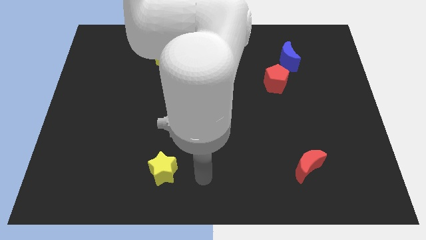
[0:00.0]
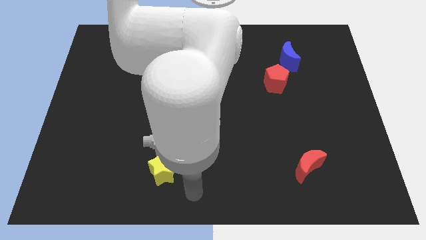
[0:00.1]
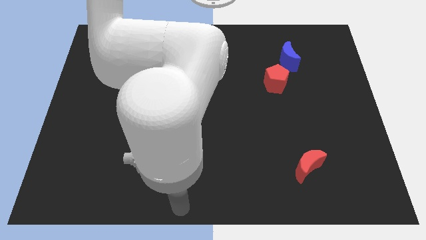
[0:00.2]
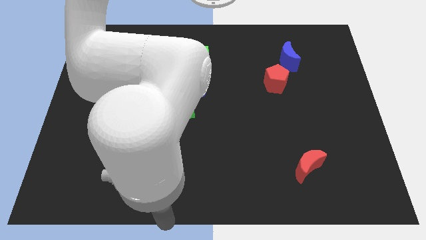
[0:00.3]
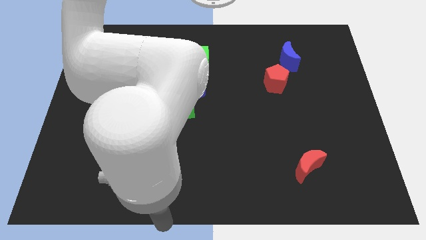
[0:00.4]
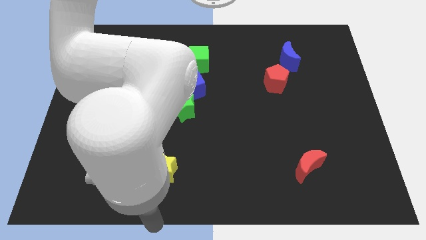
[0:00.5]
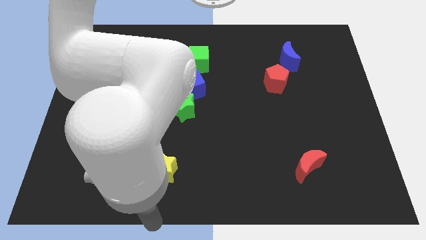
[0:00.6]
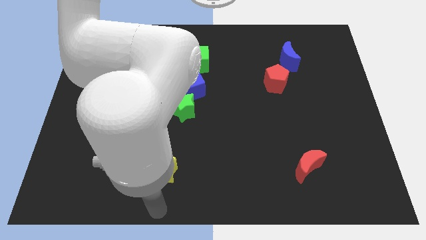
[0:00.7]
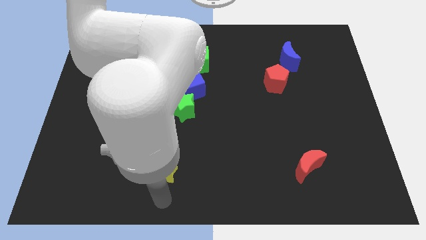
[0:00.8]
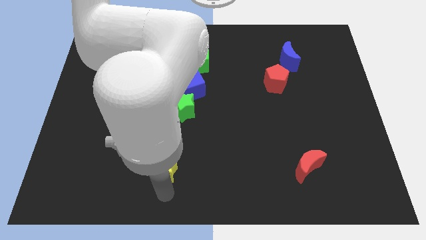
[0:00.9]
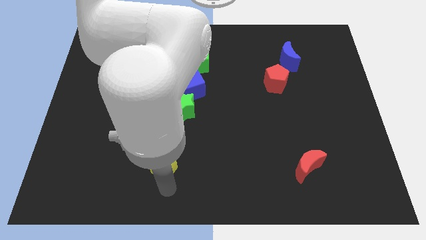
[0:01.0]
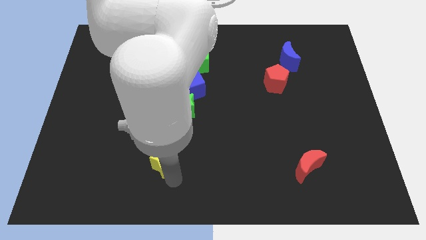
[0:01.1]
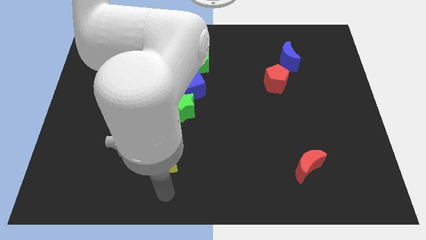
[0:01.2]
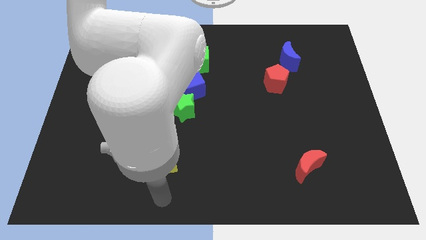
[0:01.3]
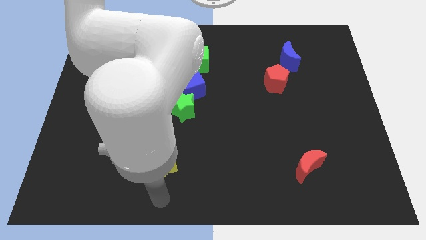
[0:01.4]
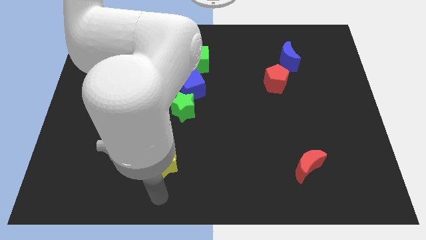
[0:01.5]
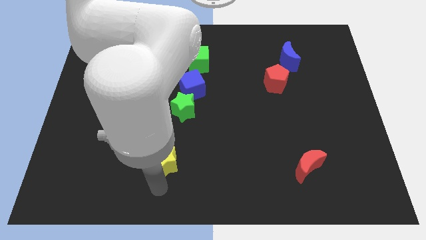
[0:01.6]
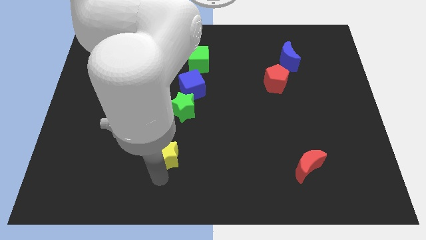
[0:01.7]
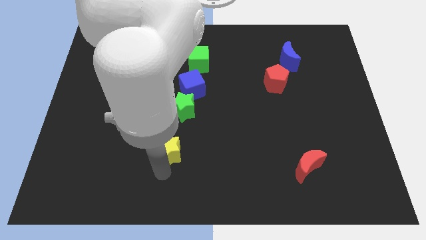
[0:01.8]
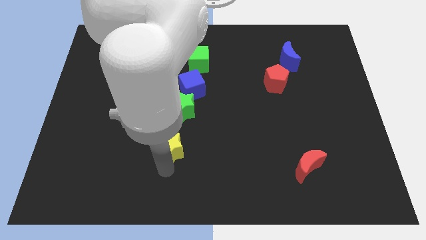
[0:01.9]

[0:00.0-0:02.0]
drag the yellow star towards the green star

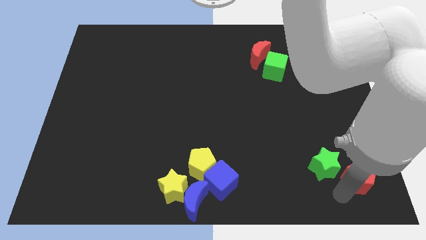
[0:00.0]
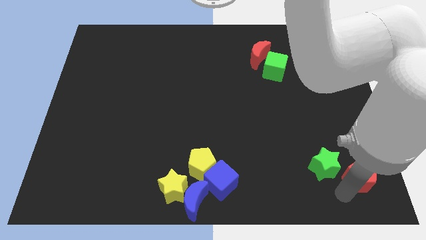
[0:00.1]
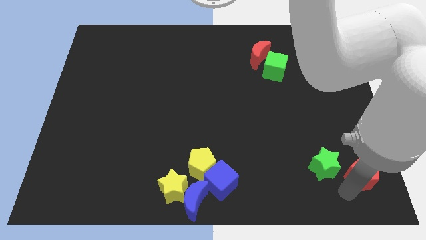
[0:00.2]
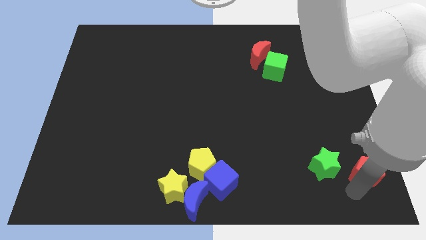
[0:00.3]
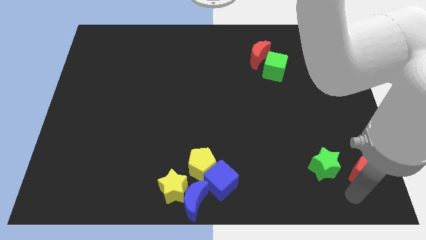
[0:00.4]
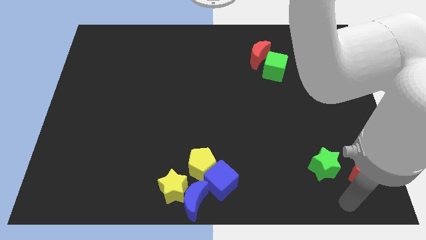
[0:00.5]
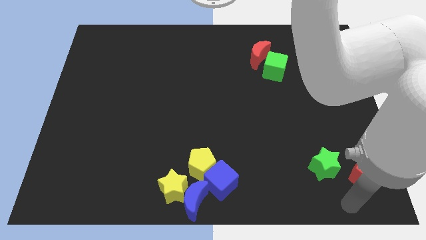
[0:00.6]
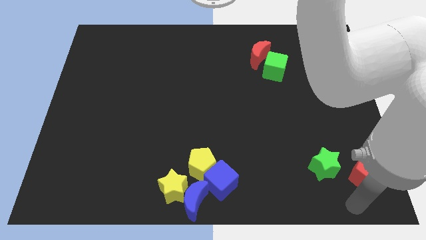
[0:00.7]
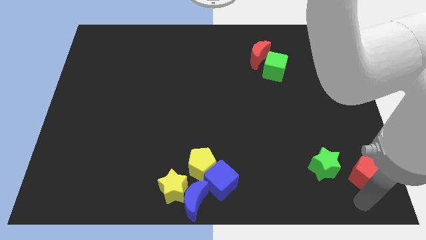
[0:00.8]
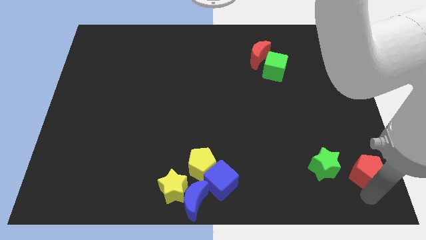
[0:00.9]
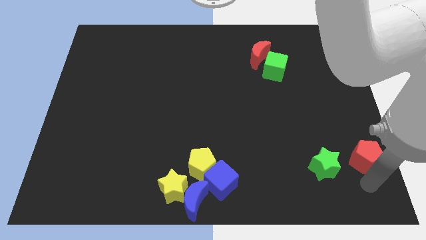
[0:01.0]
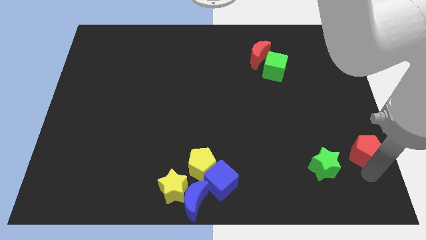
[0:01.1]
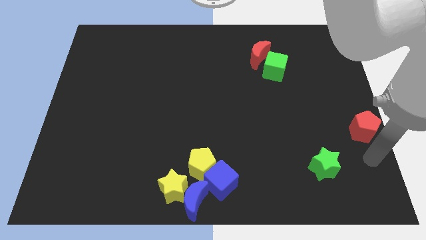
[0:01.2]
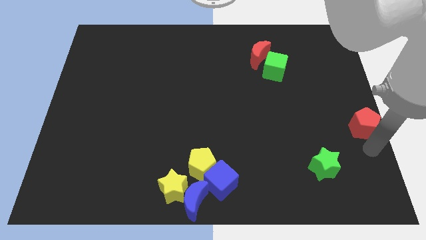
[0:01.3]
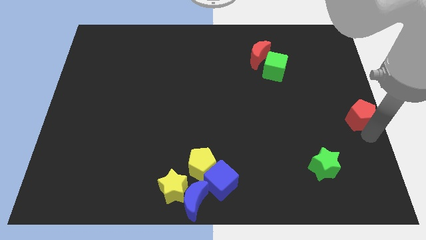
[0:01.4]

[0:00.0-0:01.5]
separate red pentagon from yellow star

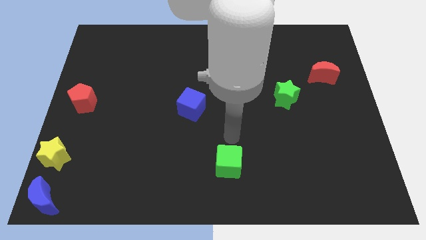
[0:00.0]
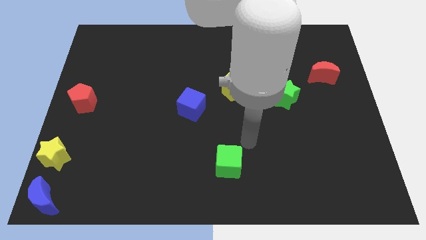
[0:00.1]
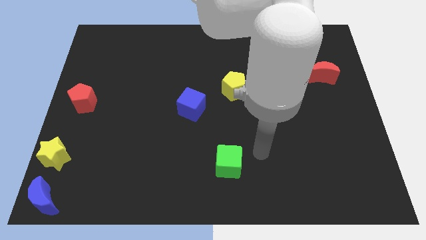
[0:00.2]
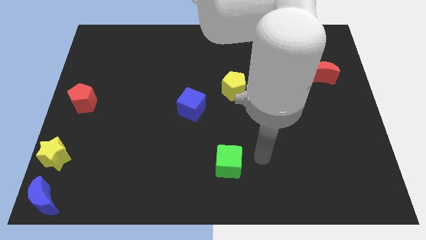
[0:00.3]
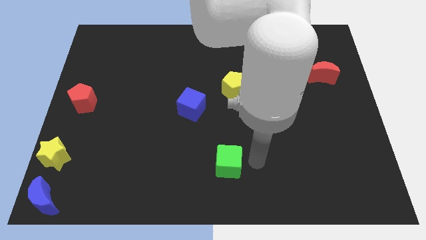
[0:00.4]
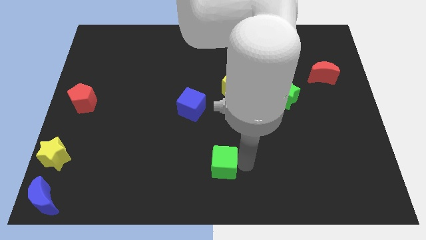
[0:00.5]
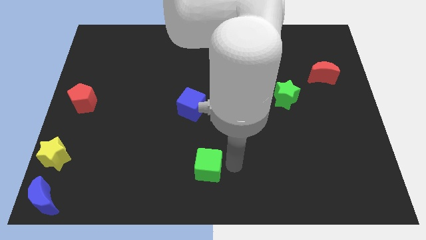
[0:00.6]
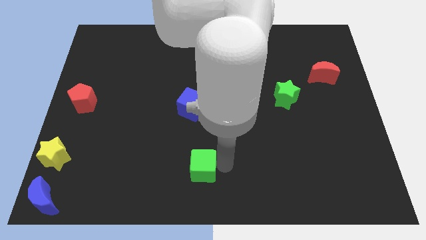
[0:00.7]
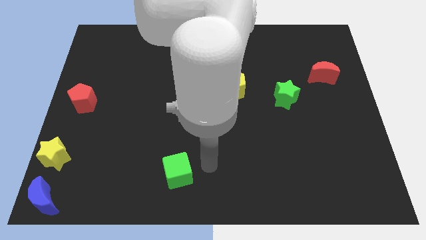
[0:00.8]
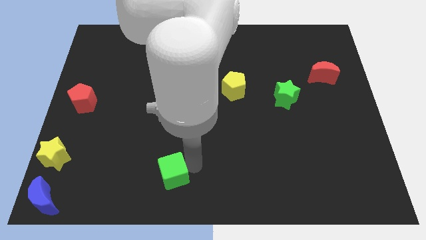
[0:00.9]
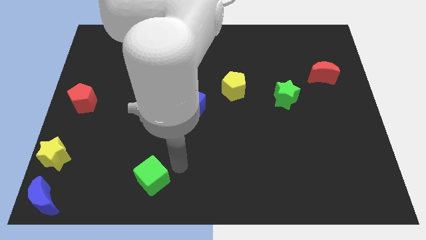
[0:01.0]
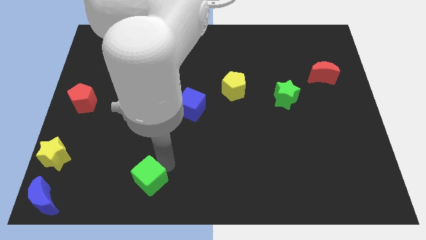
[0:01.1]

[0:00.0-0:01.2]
push the green cube towards the blue crescent

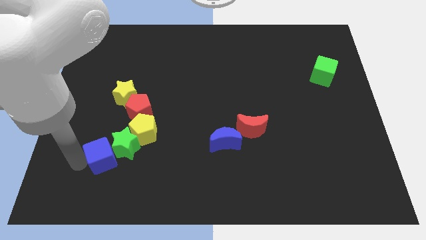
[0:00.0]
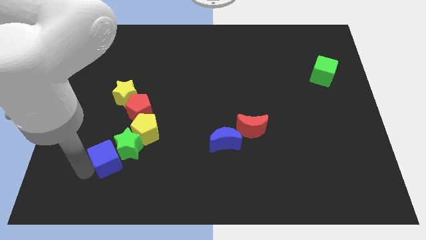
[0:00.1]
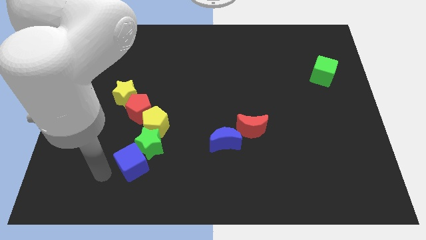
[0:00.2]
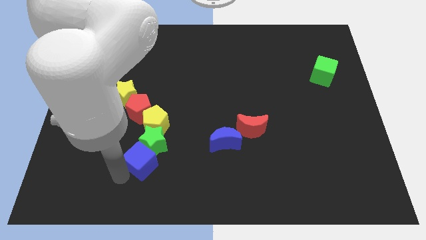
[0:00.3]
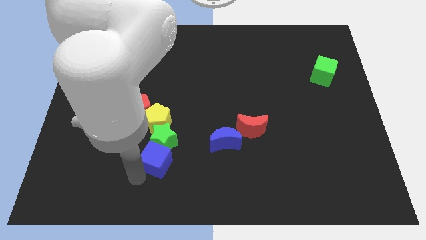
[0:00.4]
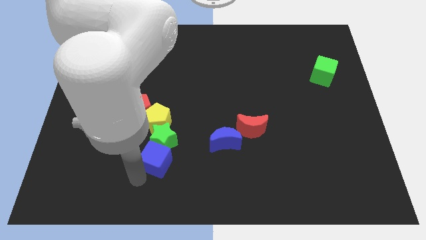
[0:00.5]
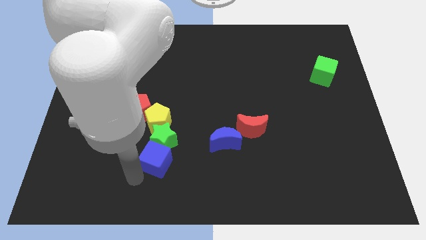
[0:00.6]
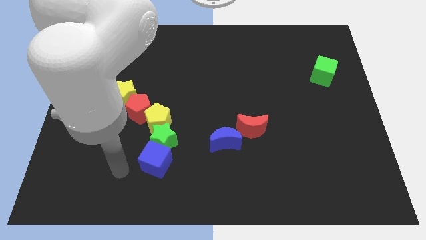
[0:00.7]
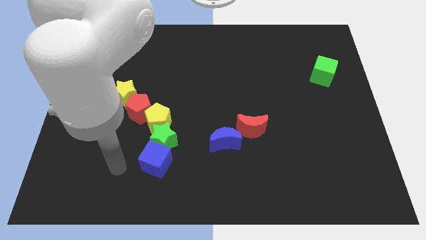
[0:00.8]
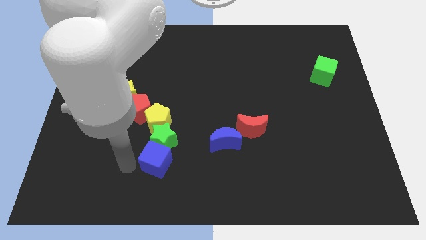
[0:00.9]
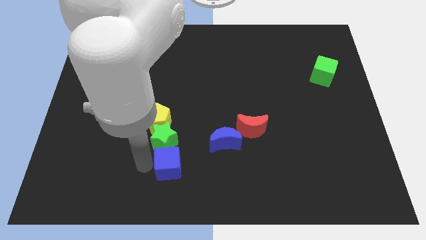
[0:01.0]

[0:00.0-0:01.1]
place the blue cube at the bottom side of the green star

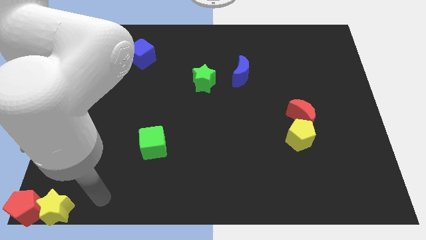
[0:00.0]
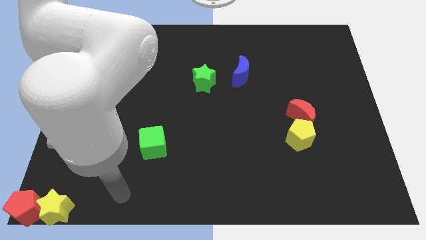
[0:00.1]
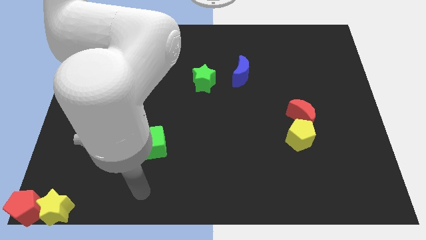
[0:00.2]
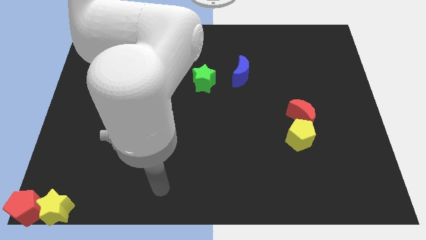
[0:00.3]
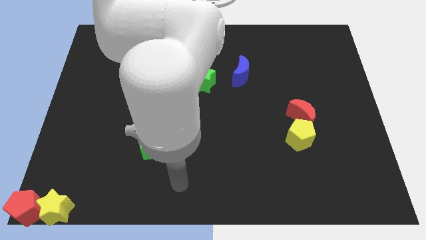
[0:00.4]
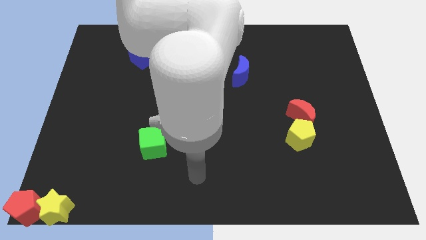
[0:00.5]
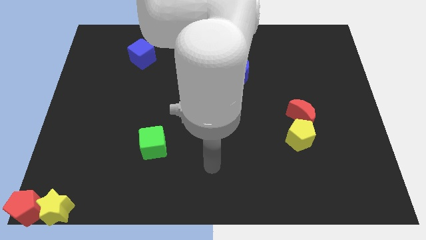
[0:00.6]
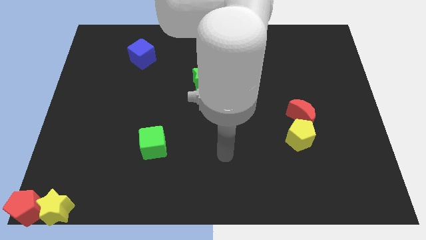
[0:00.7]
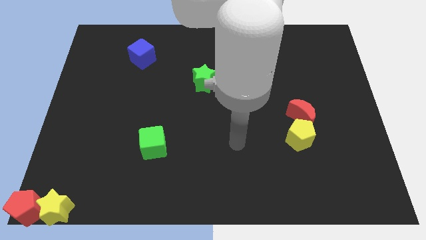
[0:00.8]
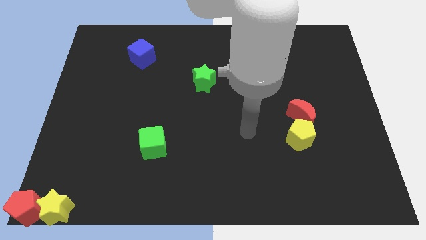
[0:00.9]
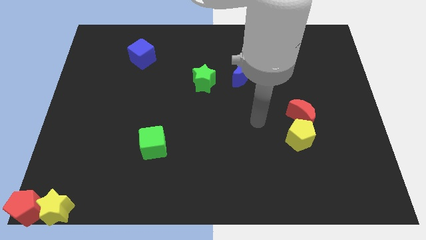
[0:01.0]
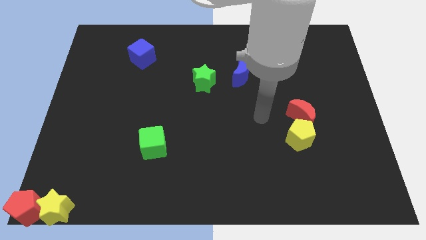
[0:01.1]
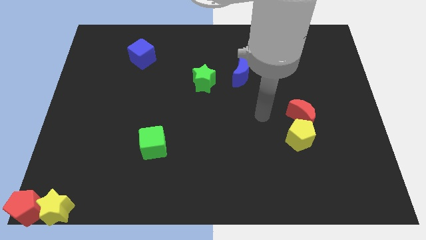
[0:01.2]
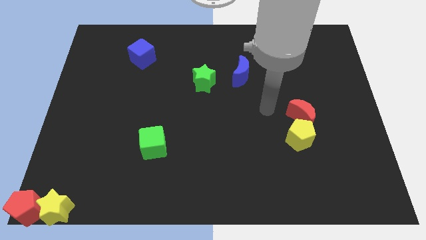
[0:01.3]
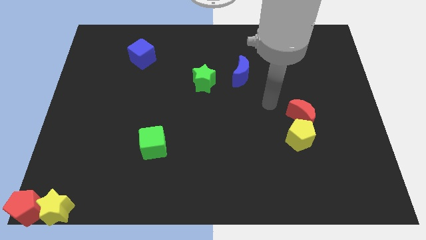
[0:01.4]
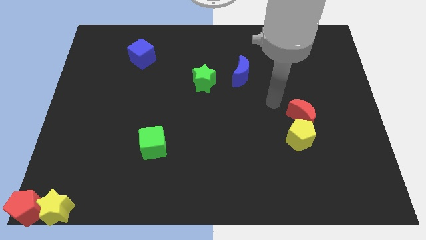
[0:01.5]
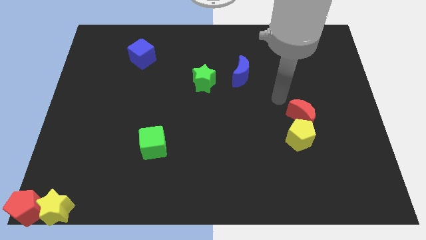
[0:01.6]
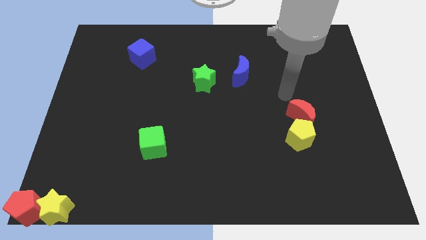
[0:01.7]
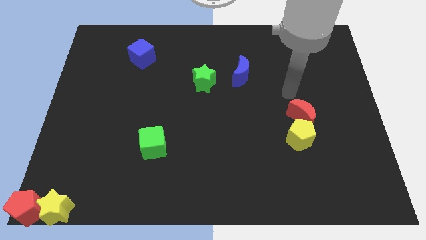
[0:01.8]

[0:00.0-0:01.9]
place your hand close to red crescent

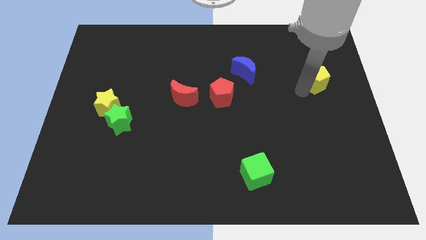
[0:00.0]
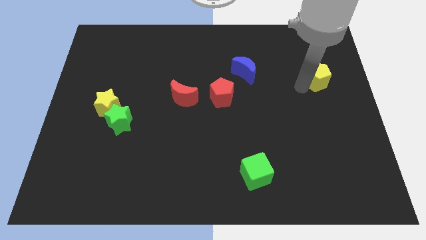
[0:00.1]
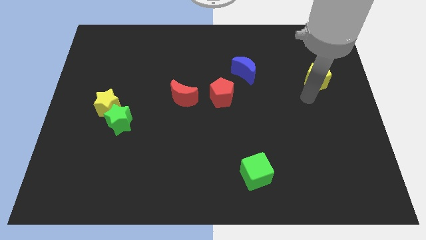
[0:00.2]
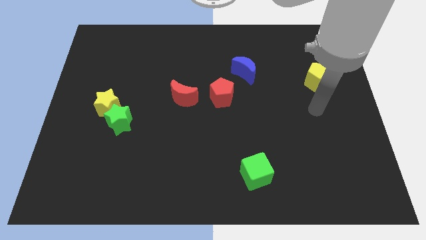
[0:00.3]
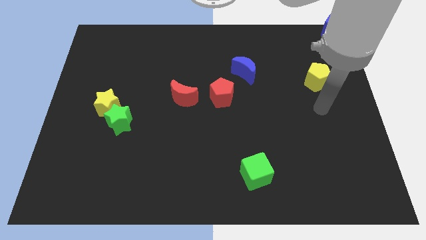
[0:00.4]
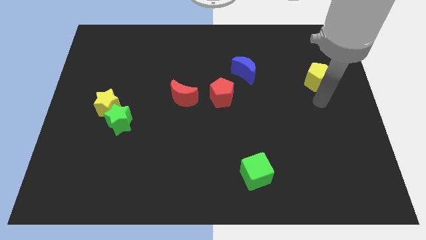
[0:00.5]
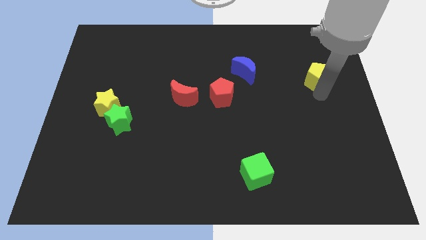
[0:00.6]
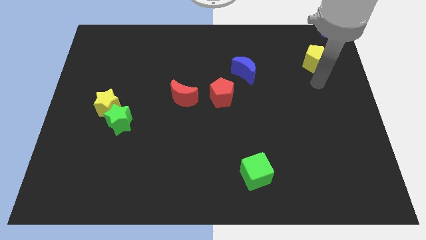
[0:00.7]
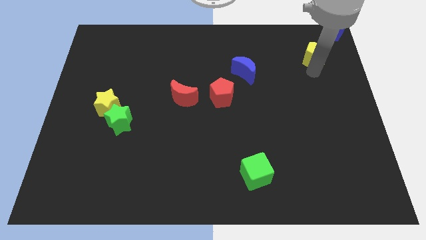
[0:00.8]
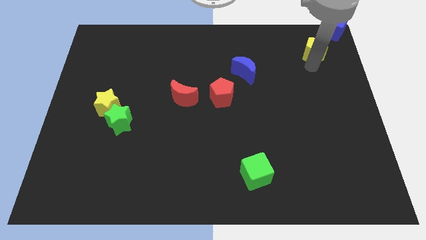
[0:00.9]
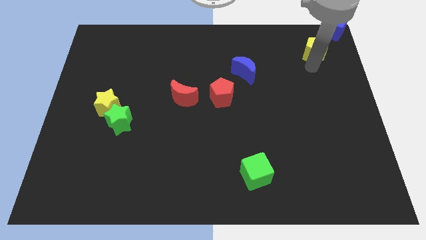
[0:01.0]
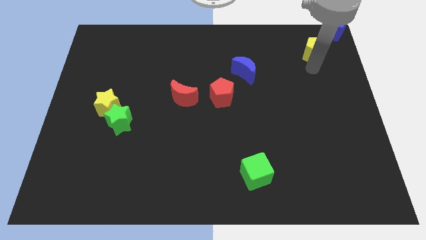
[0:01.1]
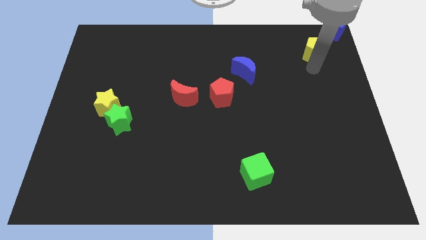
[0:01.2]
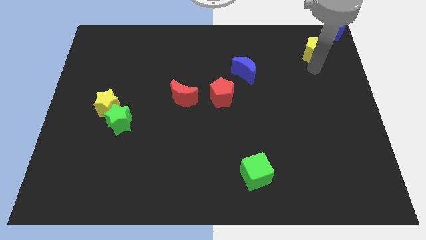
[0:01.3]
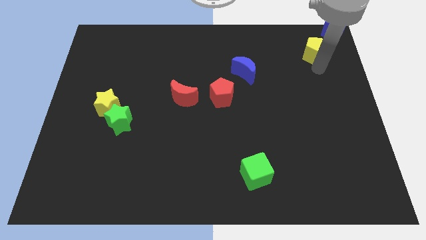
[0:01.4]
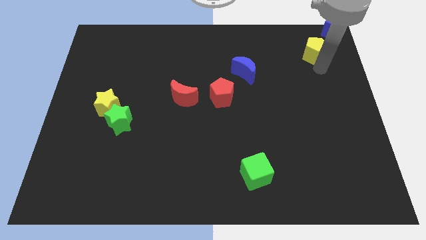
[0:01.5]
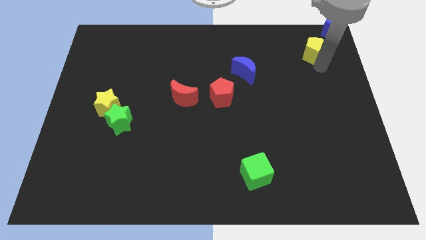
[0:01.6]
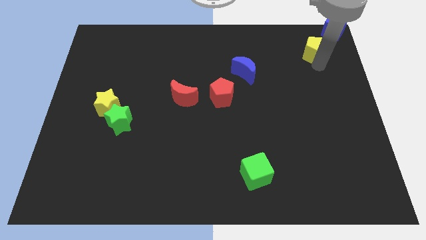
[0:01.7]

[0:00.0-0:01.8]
place the yellow pentagon at the bottom left side of blue cube
